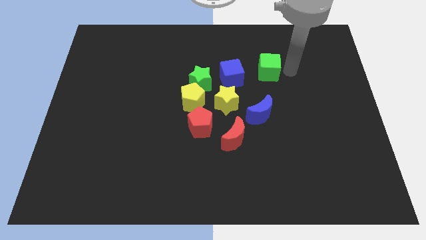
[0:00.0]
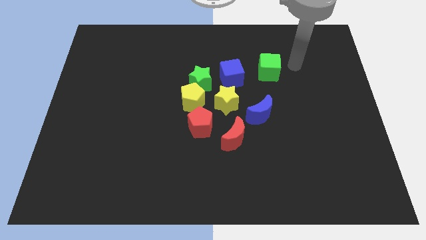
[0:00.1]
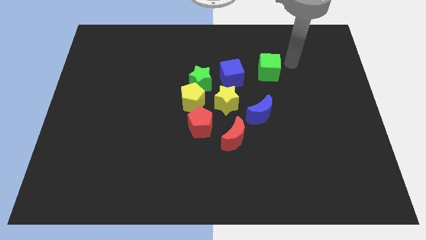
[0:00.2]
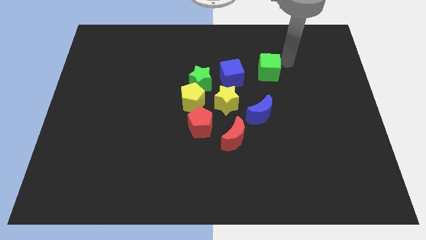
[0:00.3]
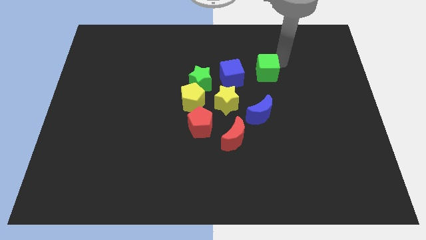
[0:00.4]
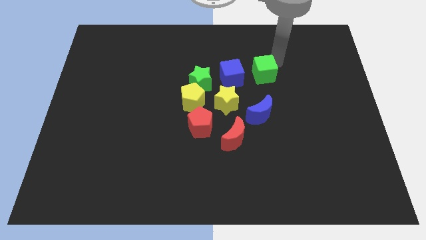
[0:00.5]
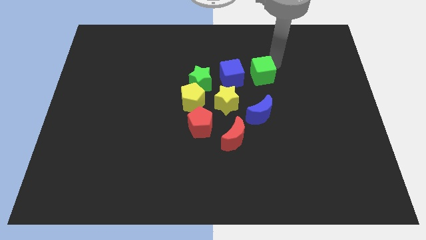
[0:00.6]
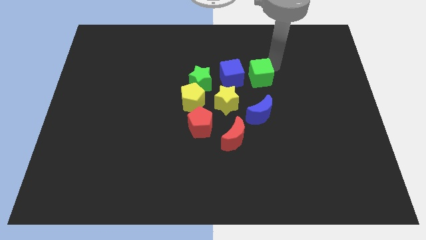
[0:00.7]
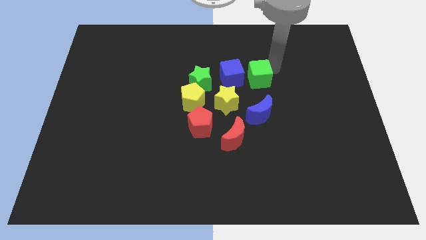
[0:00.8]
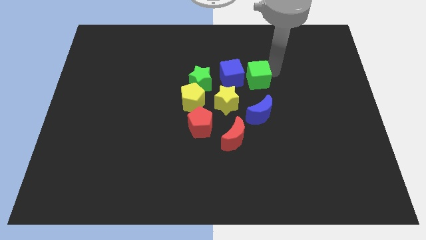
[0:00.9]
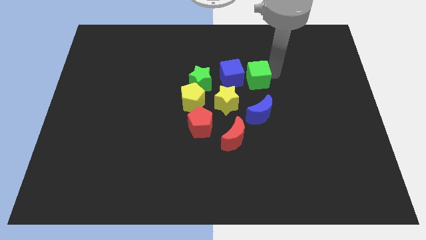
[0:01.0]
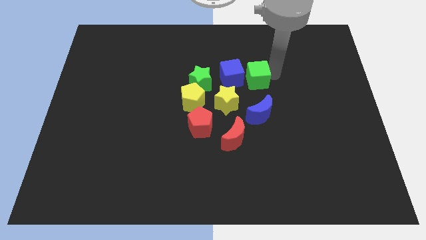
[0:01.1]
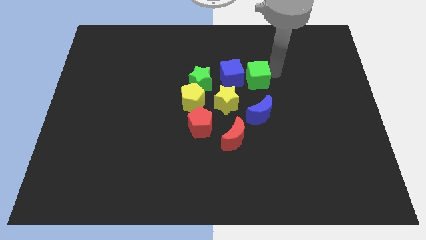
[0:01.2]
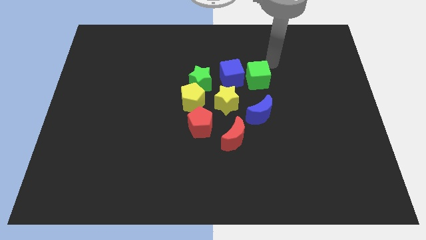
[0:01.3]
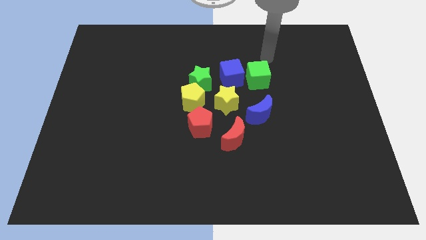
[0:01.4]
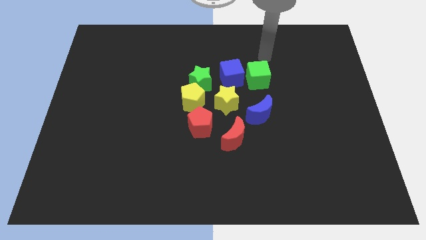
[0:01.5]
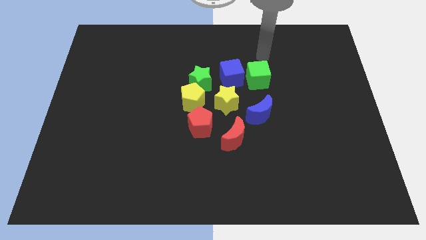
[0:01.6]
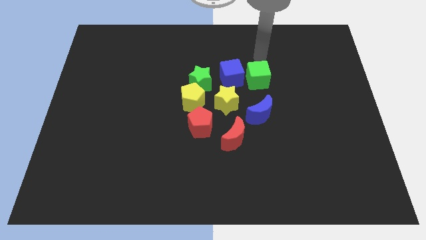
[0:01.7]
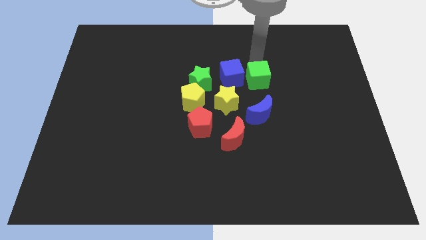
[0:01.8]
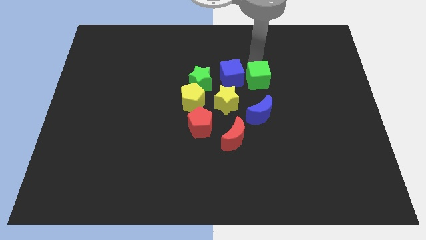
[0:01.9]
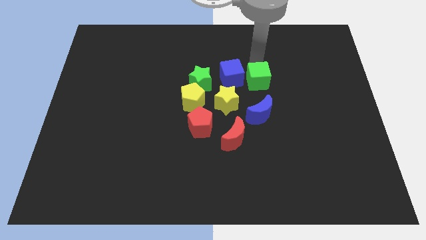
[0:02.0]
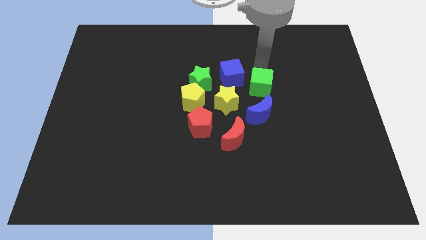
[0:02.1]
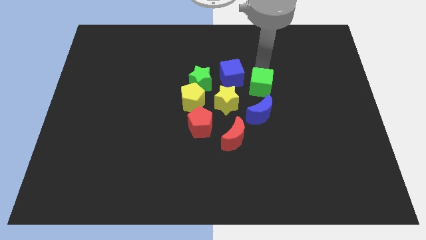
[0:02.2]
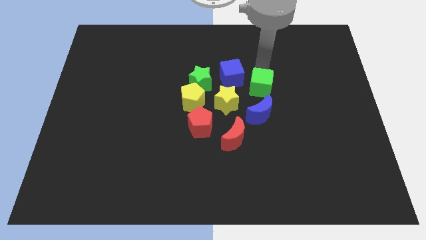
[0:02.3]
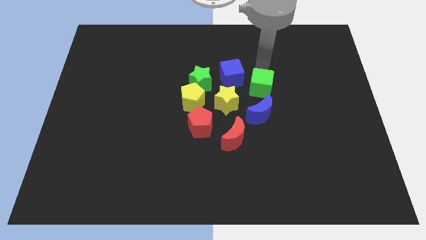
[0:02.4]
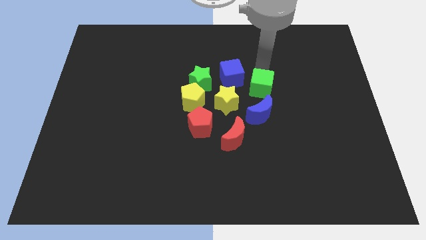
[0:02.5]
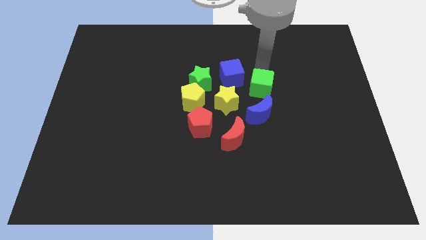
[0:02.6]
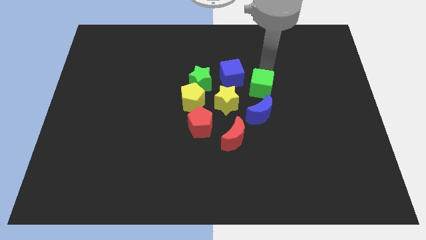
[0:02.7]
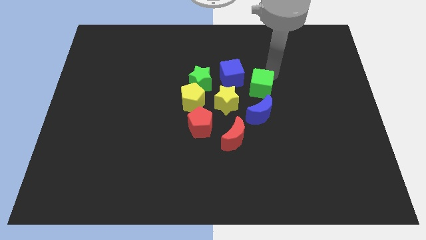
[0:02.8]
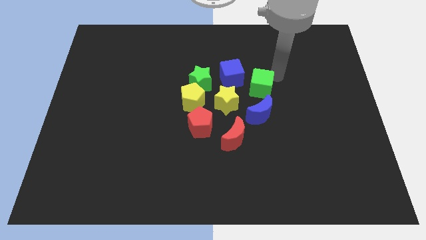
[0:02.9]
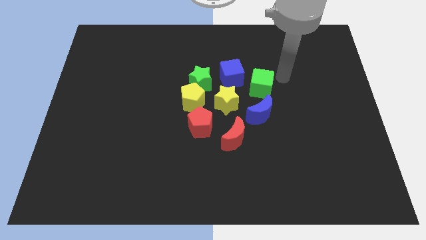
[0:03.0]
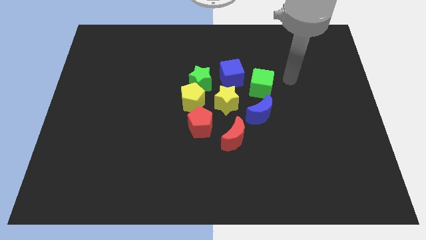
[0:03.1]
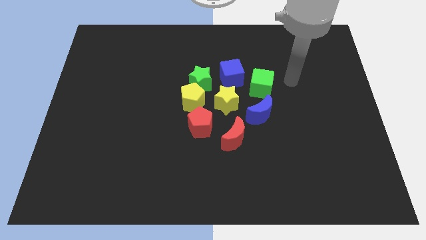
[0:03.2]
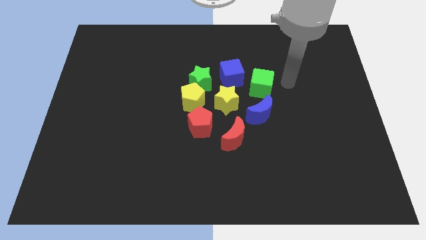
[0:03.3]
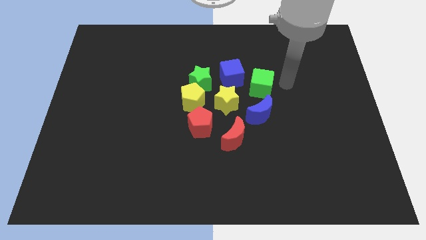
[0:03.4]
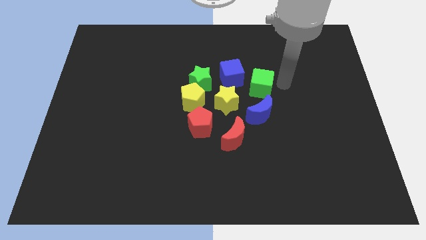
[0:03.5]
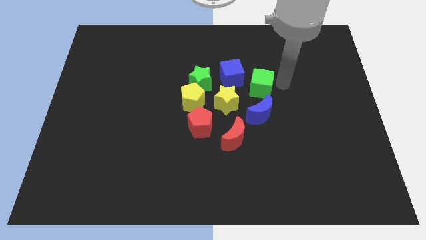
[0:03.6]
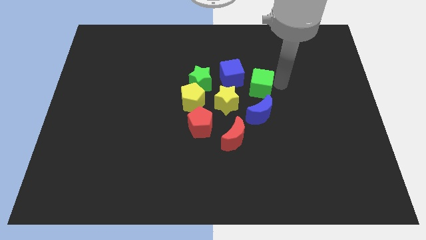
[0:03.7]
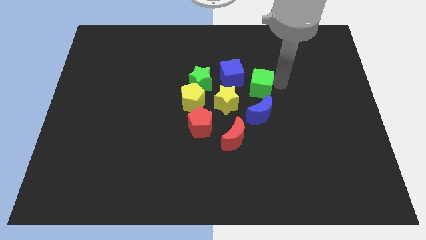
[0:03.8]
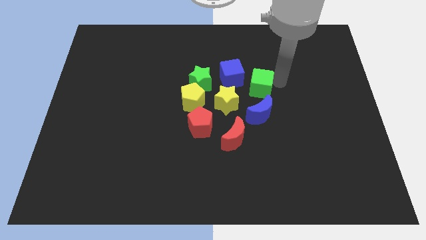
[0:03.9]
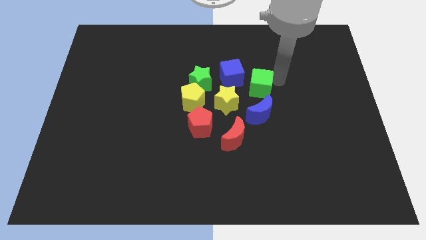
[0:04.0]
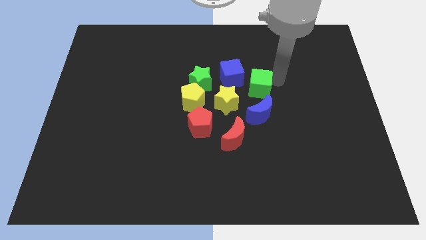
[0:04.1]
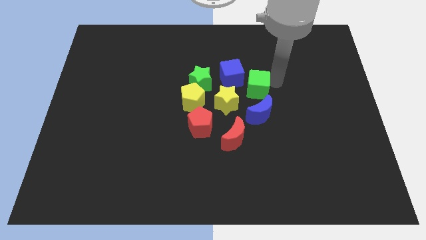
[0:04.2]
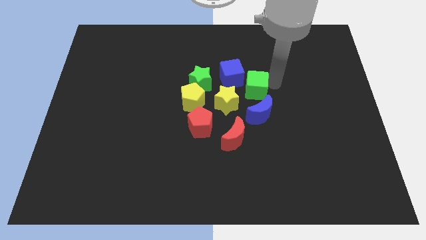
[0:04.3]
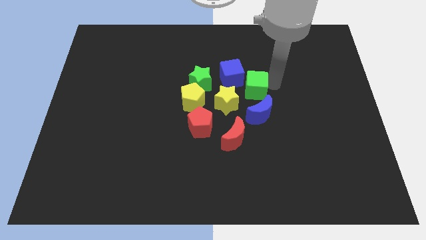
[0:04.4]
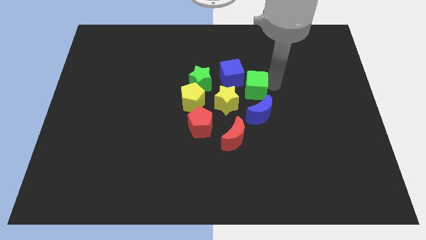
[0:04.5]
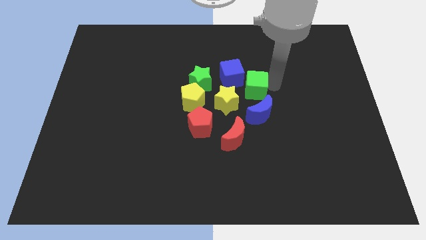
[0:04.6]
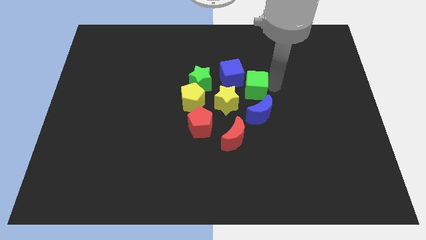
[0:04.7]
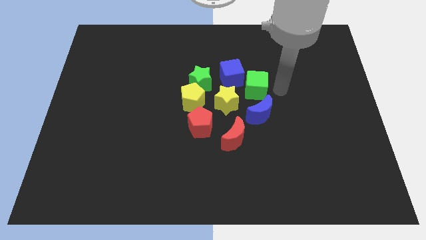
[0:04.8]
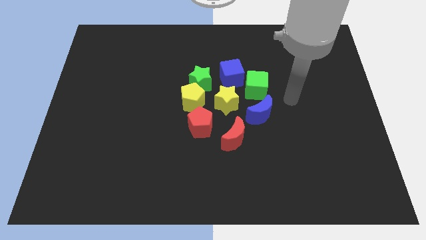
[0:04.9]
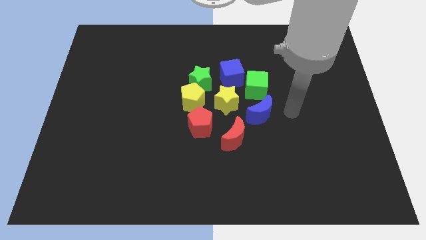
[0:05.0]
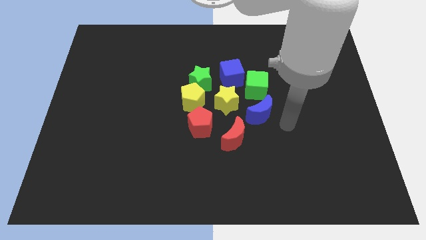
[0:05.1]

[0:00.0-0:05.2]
push the green cube towards the center

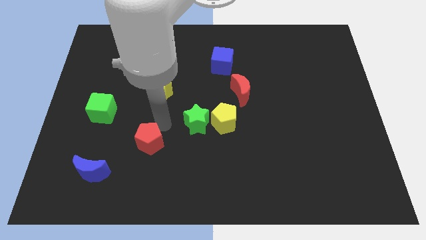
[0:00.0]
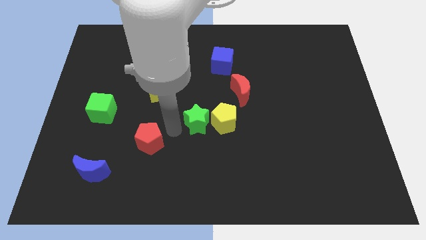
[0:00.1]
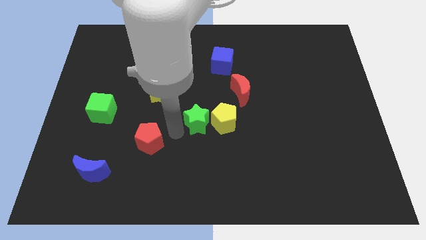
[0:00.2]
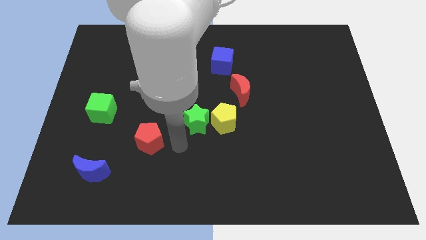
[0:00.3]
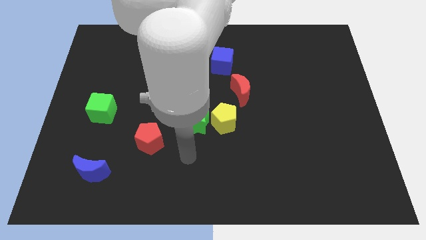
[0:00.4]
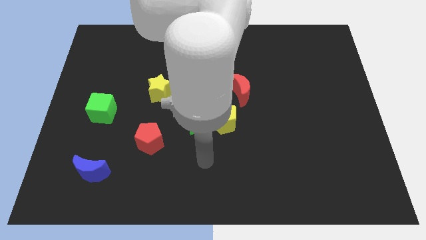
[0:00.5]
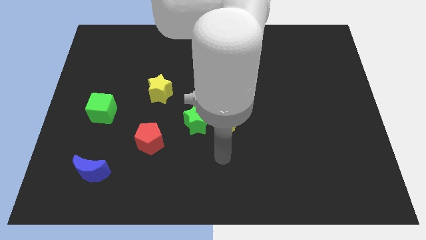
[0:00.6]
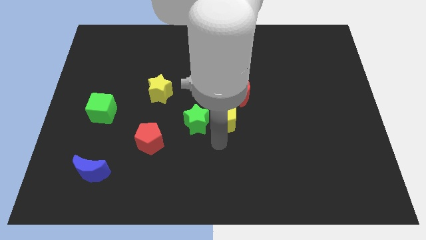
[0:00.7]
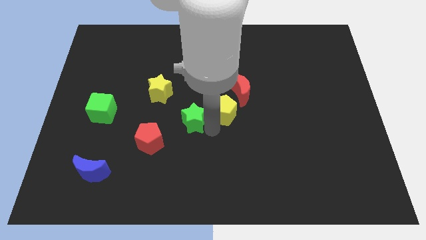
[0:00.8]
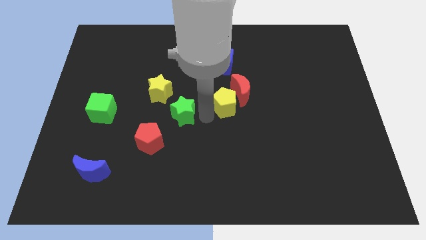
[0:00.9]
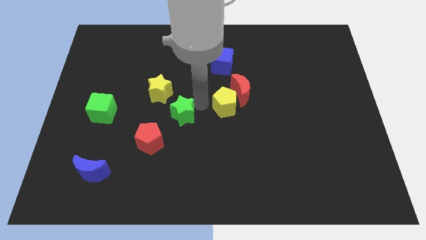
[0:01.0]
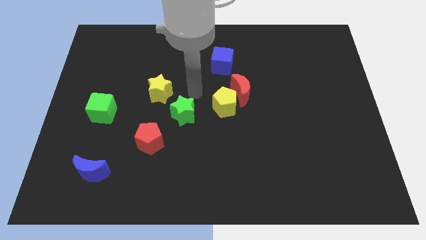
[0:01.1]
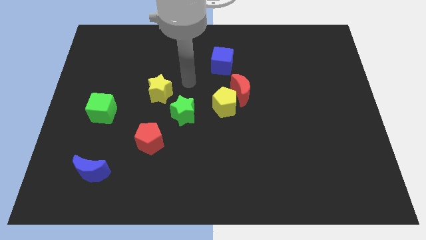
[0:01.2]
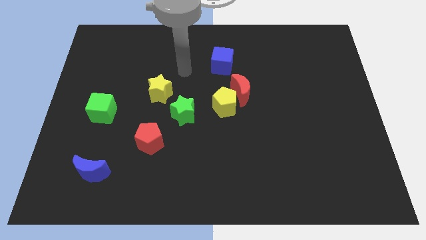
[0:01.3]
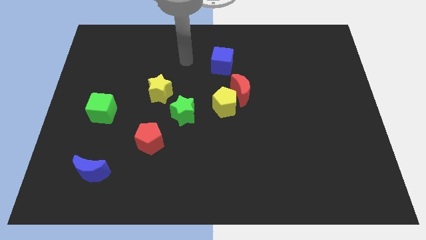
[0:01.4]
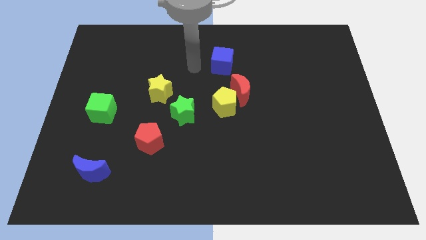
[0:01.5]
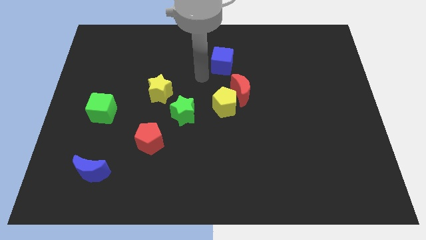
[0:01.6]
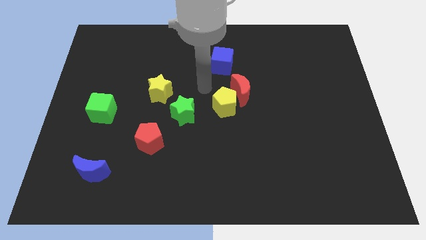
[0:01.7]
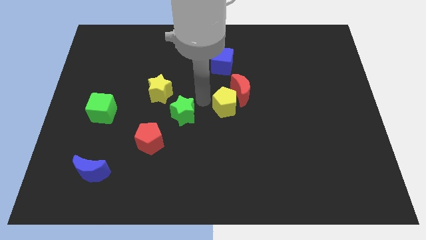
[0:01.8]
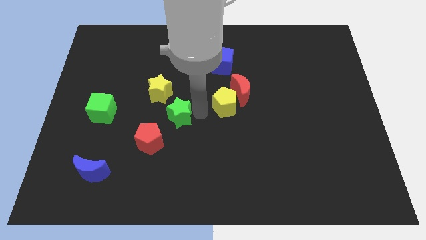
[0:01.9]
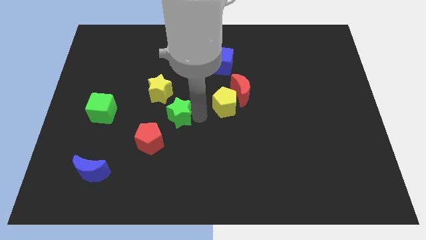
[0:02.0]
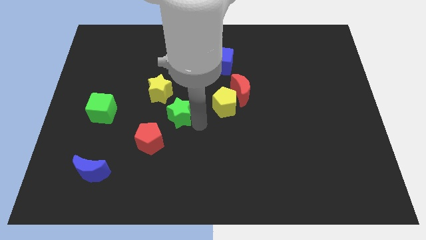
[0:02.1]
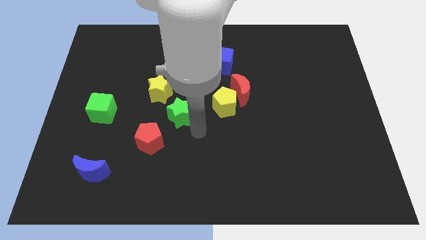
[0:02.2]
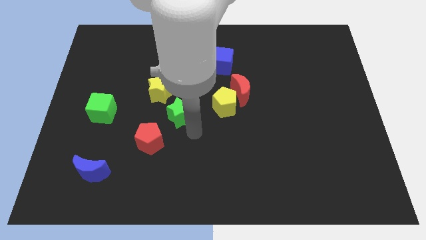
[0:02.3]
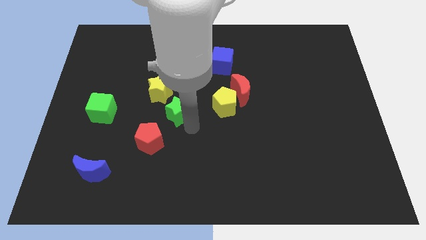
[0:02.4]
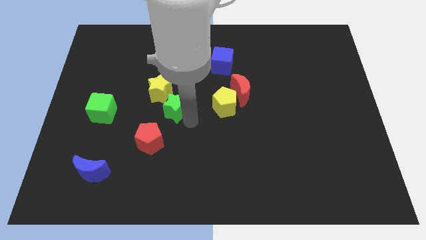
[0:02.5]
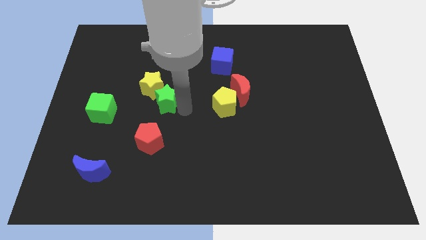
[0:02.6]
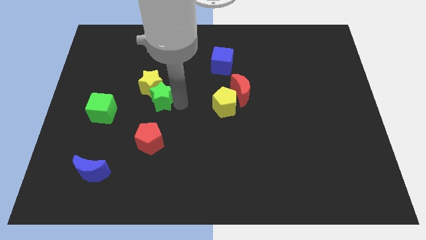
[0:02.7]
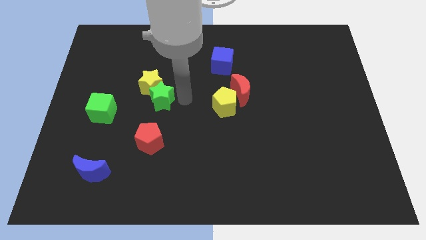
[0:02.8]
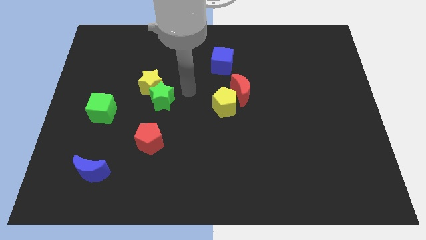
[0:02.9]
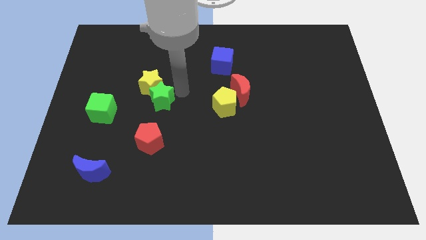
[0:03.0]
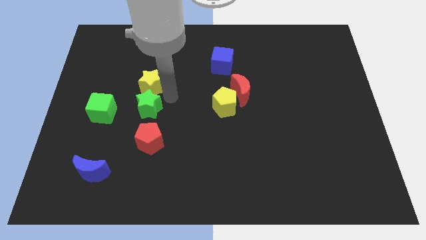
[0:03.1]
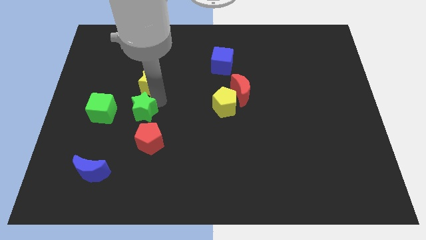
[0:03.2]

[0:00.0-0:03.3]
place green star below yellow star

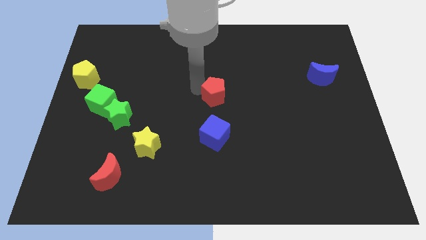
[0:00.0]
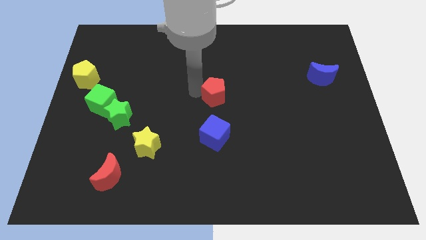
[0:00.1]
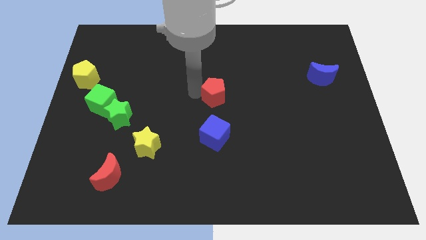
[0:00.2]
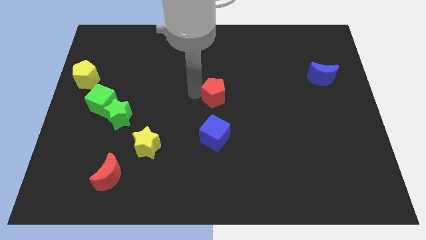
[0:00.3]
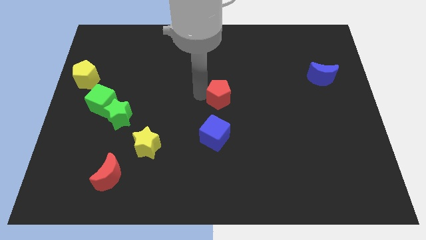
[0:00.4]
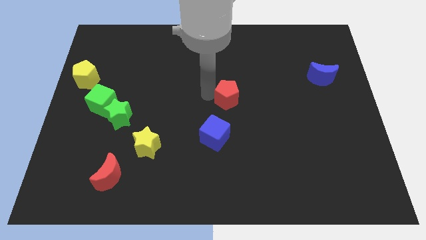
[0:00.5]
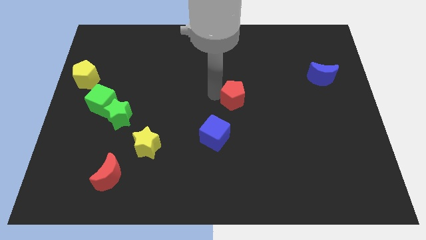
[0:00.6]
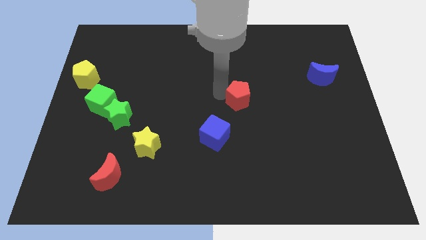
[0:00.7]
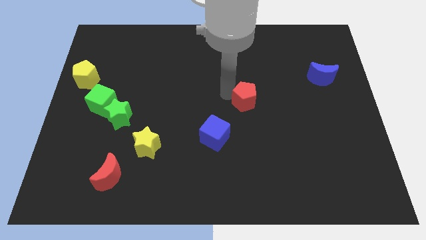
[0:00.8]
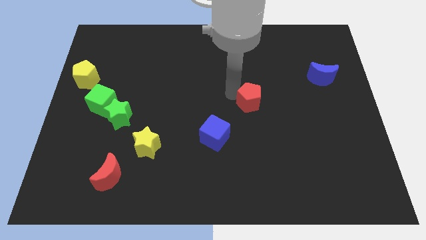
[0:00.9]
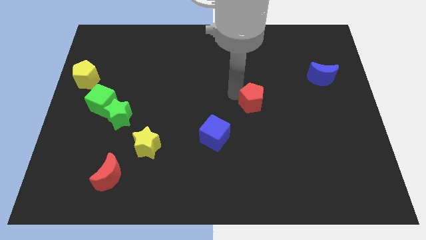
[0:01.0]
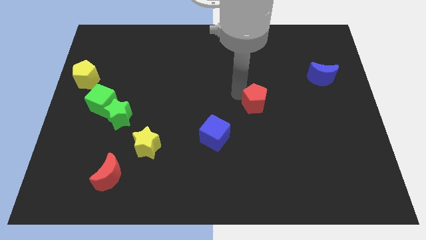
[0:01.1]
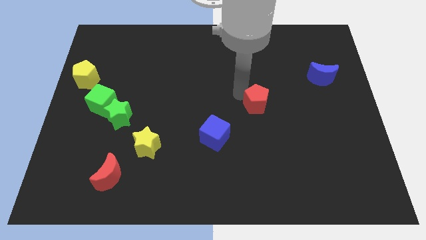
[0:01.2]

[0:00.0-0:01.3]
move the red pentagon to the top right of the blue cube
